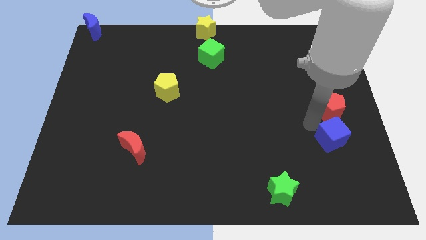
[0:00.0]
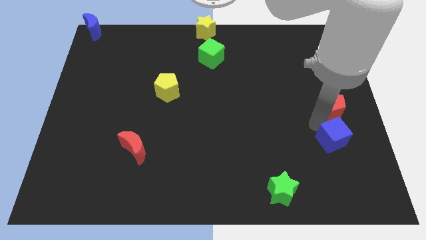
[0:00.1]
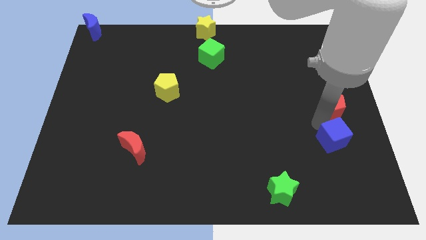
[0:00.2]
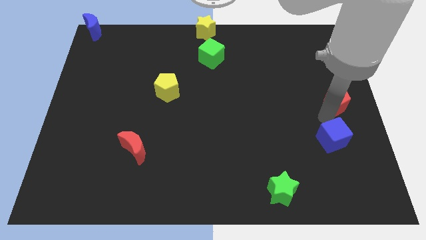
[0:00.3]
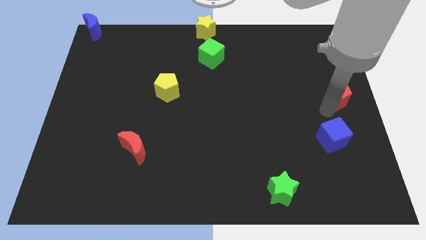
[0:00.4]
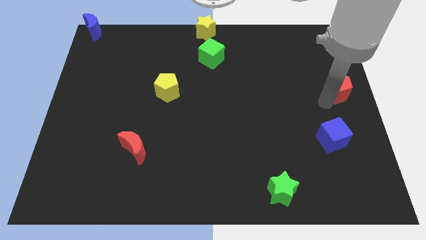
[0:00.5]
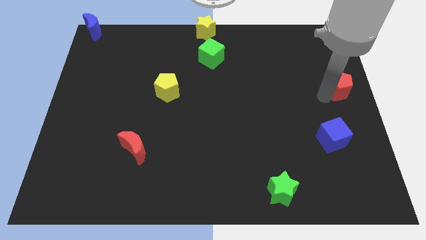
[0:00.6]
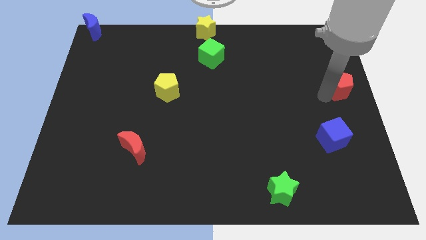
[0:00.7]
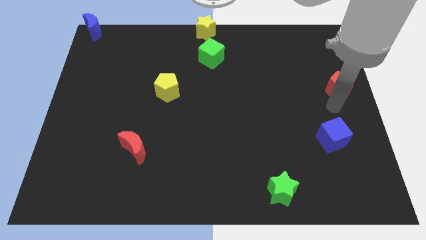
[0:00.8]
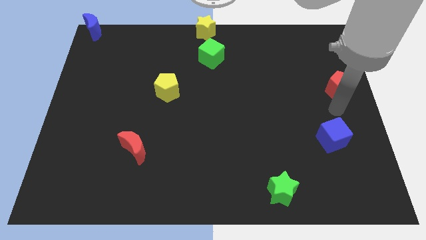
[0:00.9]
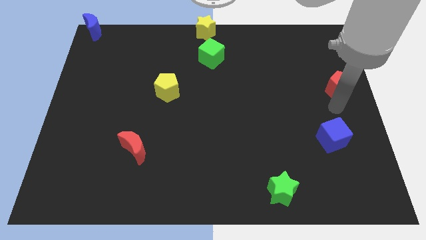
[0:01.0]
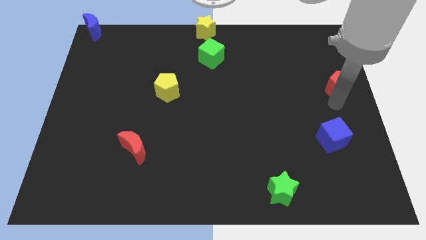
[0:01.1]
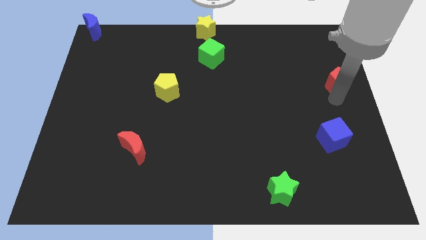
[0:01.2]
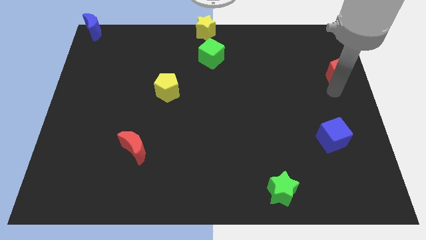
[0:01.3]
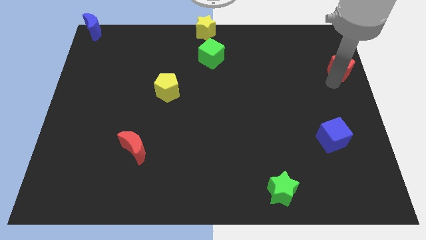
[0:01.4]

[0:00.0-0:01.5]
separarate the red pentagon from the top side of the blue cube

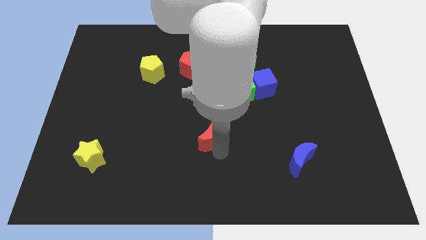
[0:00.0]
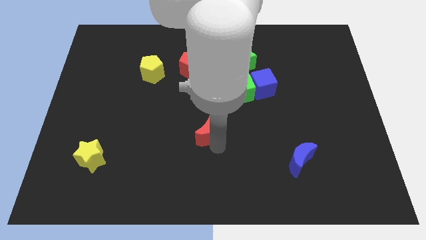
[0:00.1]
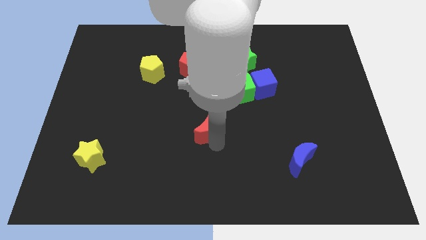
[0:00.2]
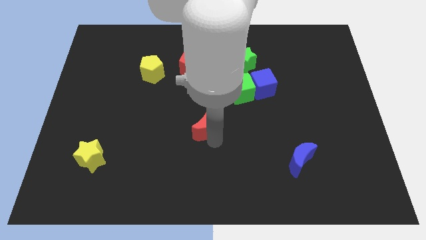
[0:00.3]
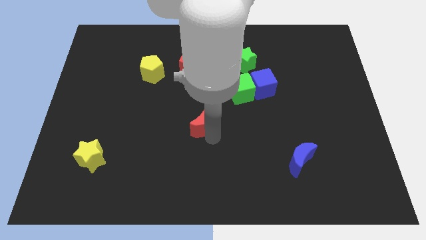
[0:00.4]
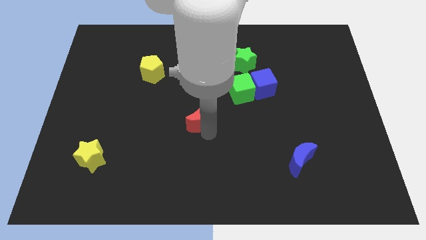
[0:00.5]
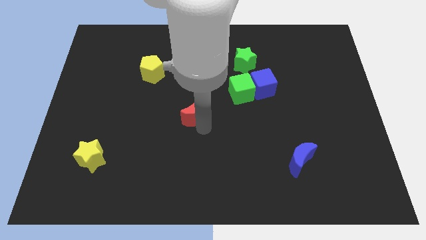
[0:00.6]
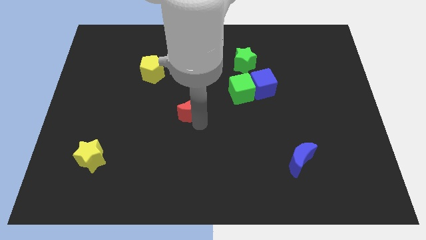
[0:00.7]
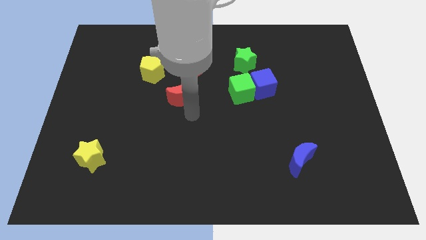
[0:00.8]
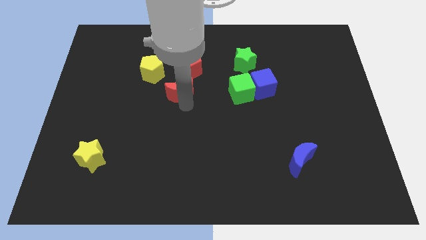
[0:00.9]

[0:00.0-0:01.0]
place the red moon left to the green cube

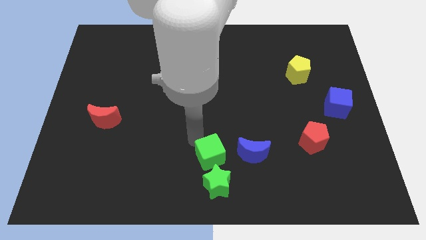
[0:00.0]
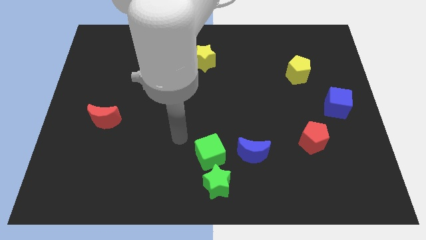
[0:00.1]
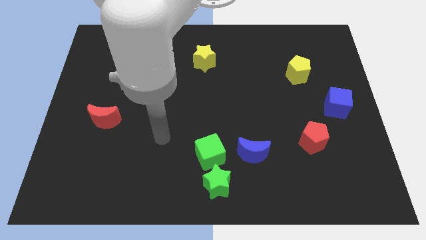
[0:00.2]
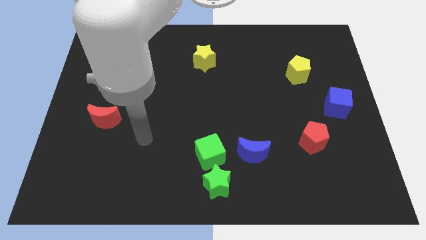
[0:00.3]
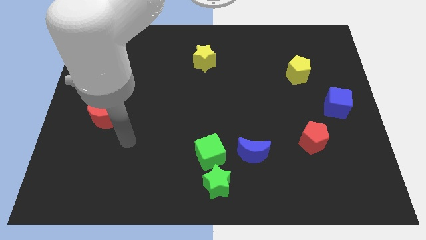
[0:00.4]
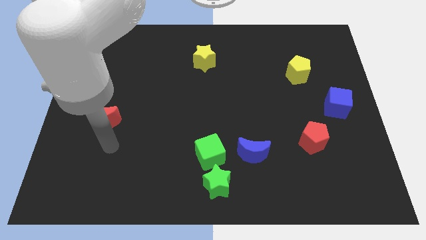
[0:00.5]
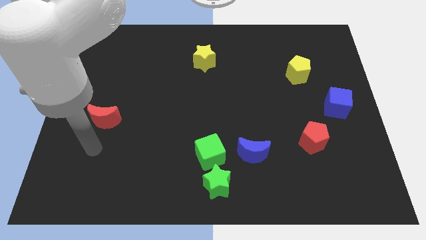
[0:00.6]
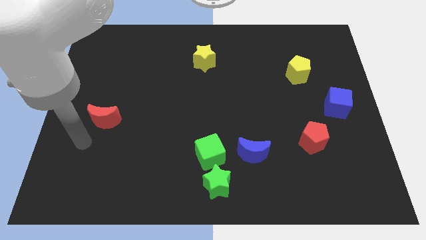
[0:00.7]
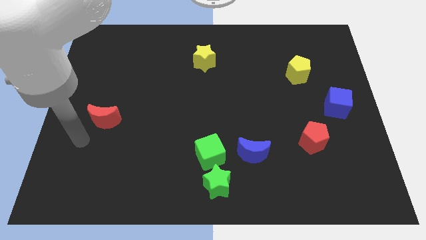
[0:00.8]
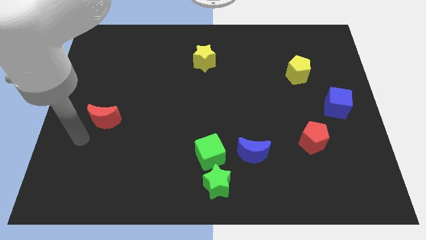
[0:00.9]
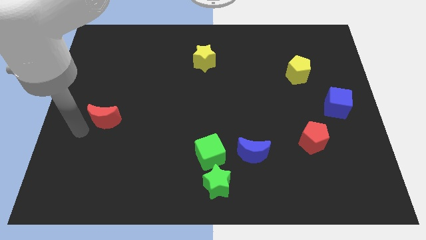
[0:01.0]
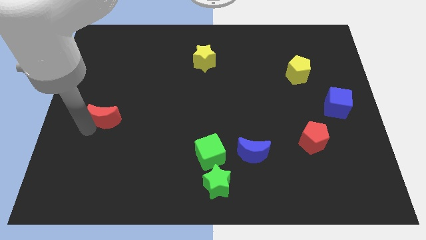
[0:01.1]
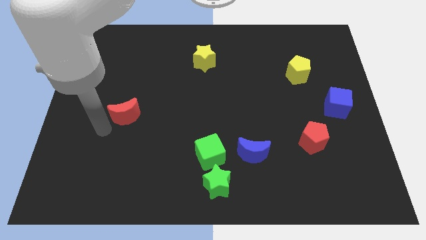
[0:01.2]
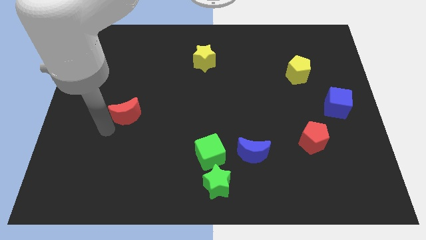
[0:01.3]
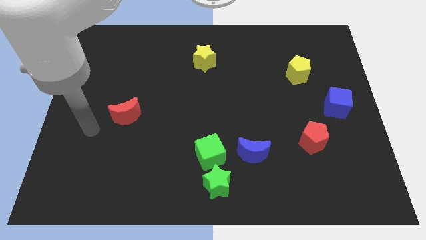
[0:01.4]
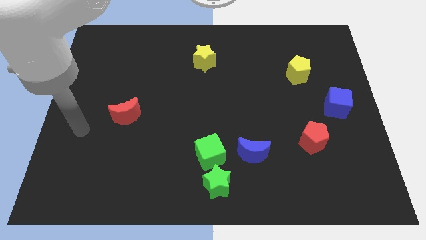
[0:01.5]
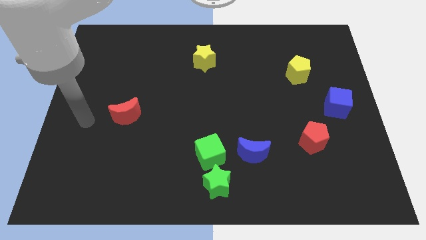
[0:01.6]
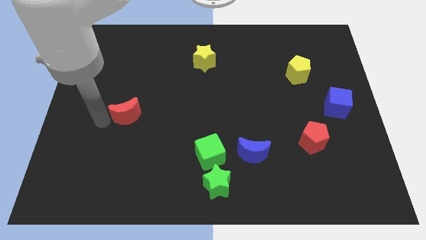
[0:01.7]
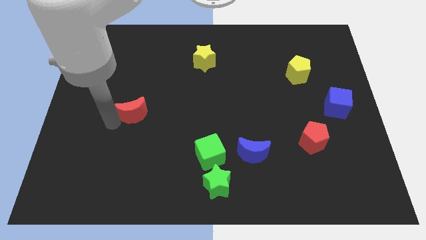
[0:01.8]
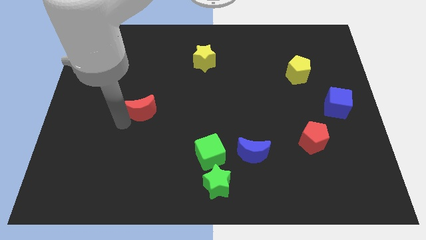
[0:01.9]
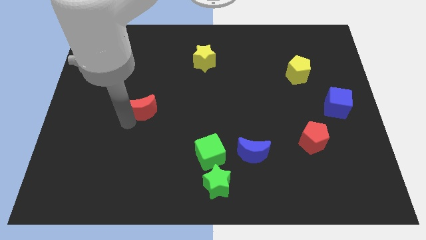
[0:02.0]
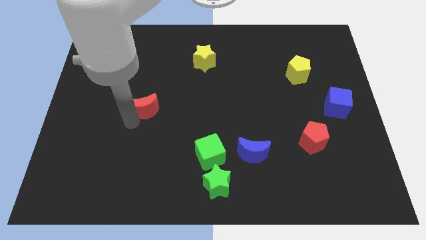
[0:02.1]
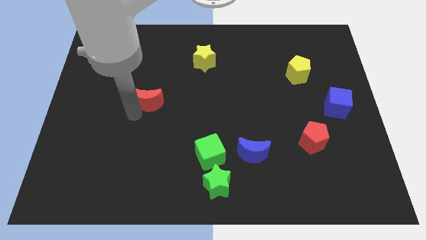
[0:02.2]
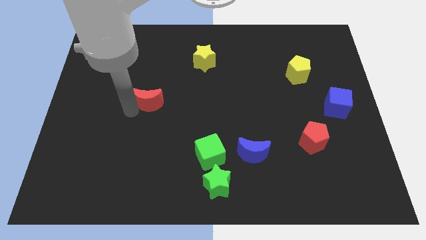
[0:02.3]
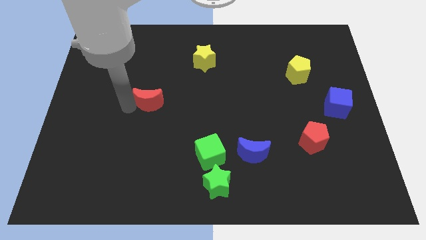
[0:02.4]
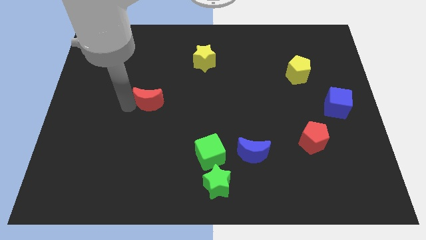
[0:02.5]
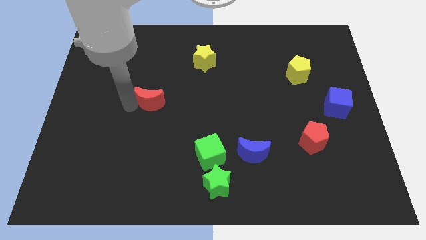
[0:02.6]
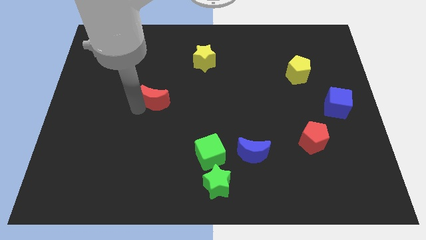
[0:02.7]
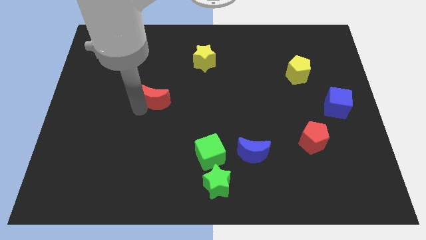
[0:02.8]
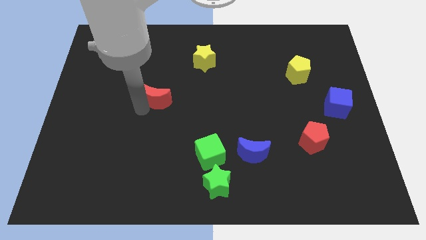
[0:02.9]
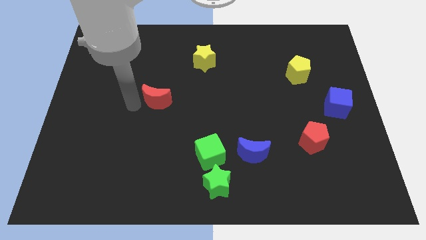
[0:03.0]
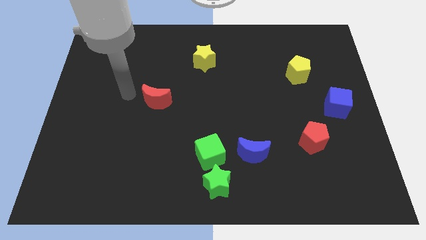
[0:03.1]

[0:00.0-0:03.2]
place the red crescent diagonally above the top left side of the green cube

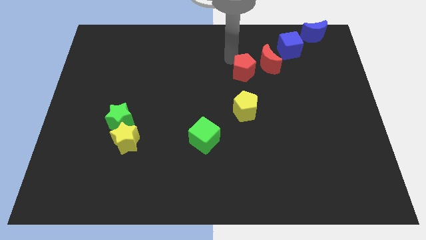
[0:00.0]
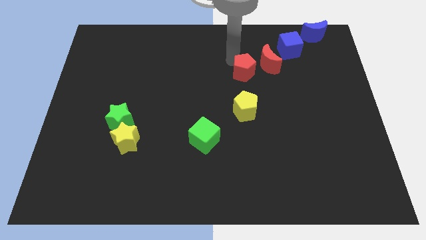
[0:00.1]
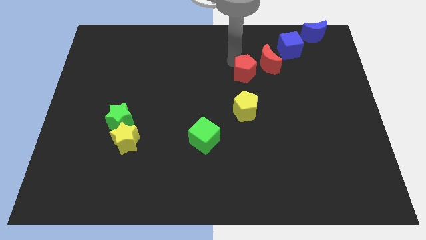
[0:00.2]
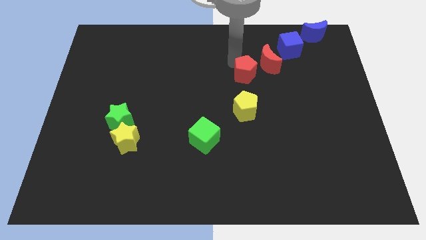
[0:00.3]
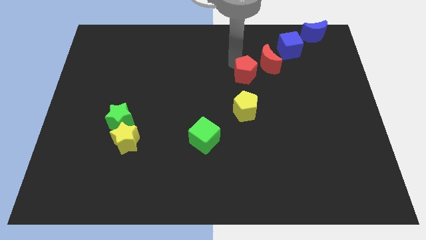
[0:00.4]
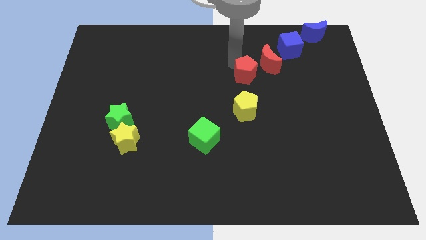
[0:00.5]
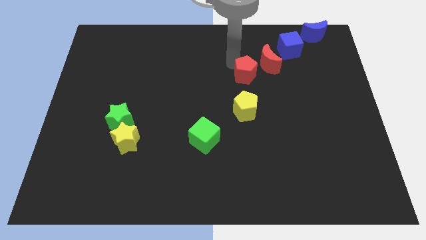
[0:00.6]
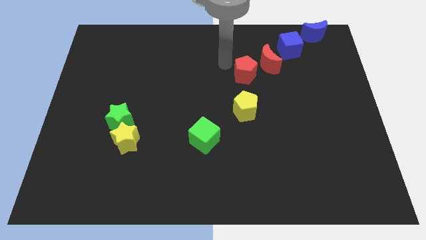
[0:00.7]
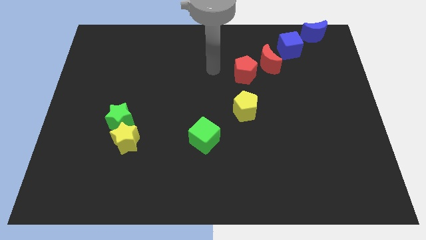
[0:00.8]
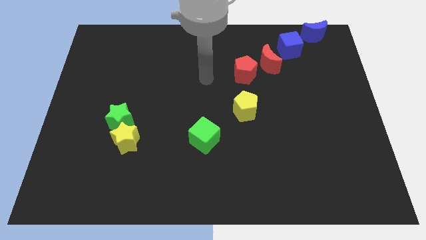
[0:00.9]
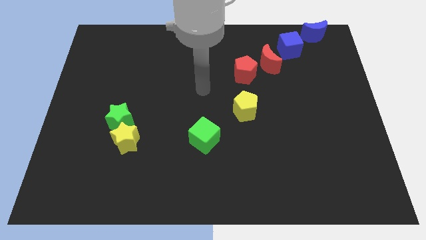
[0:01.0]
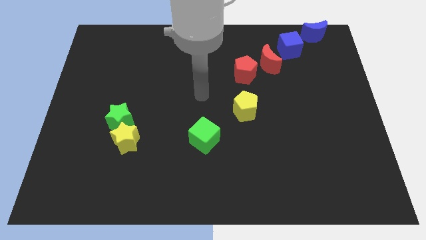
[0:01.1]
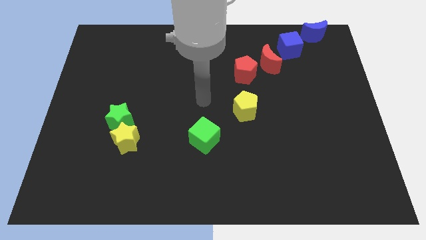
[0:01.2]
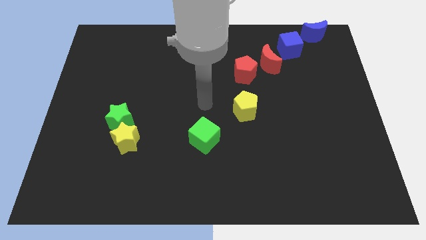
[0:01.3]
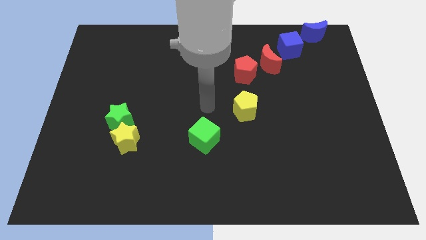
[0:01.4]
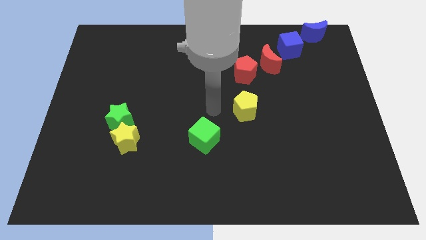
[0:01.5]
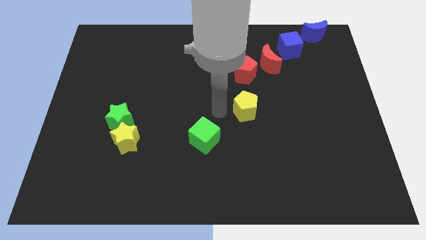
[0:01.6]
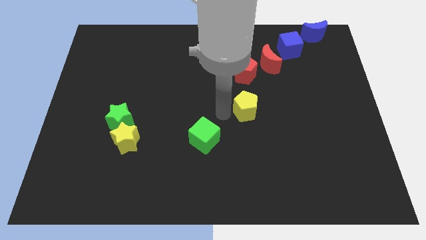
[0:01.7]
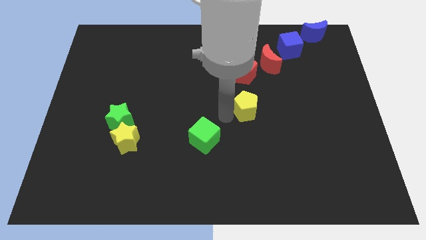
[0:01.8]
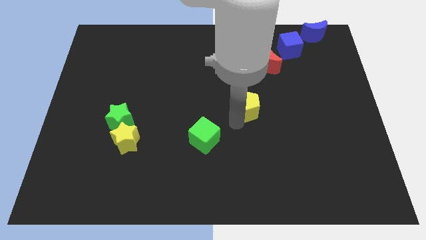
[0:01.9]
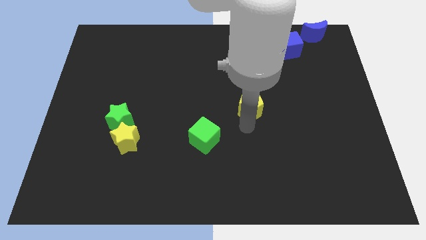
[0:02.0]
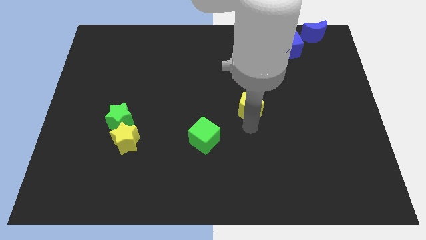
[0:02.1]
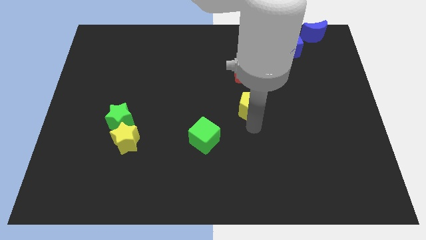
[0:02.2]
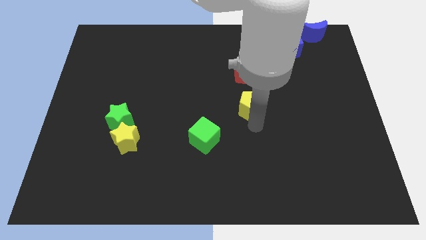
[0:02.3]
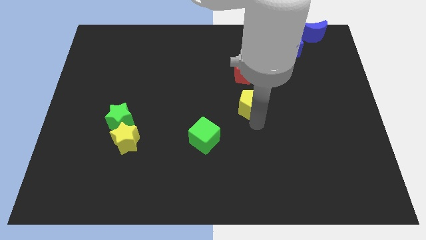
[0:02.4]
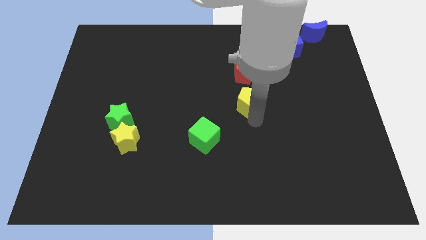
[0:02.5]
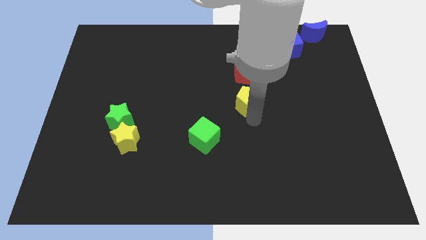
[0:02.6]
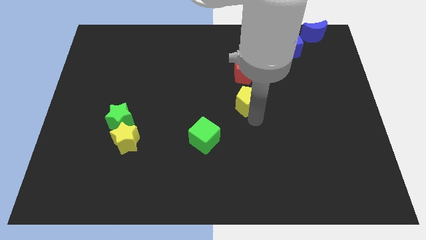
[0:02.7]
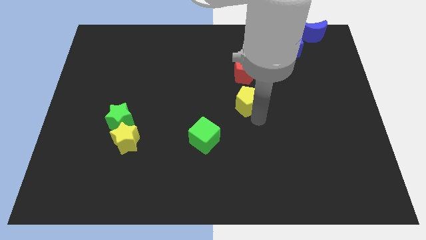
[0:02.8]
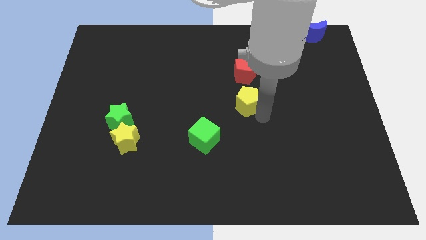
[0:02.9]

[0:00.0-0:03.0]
move the yellow pentagon to the bottom of red pentagon

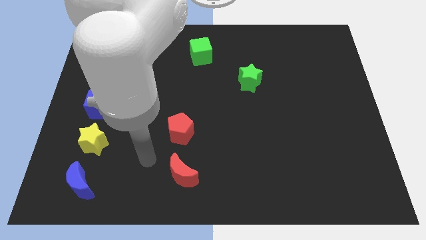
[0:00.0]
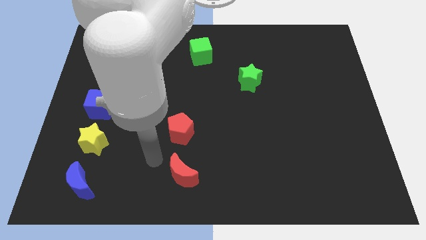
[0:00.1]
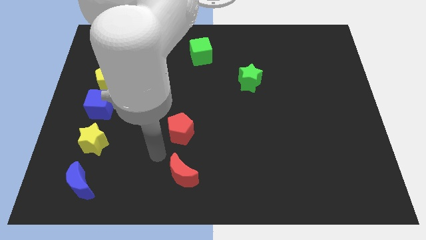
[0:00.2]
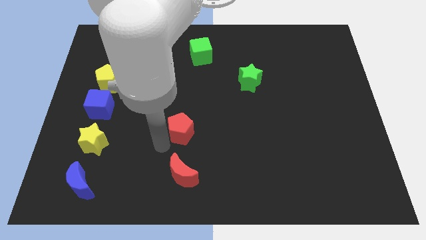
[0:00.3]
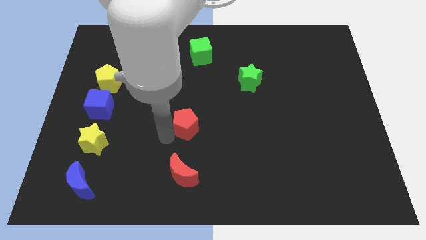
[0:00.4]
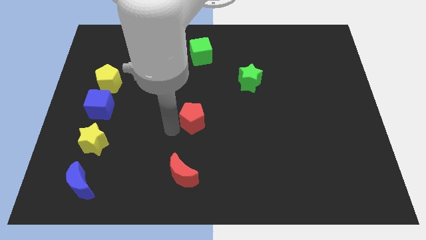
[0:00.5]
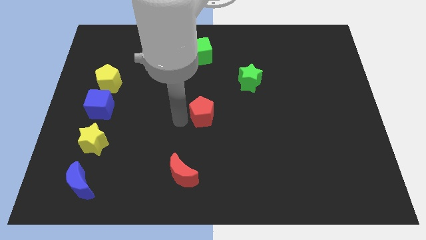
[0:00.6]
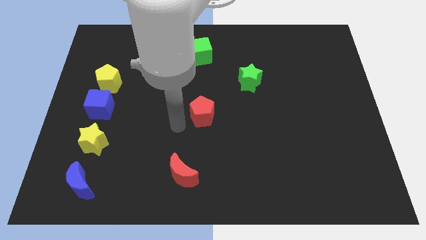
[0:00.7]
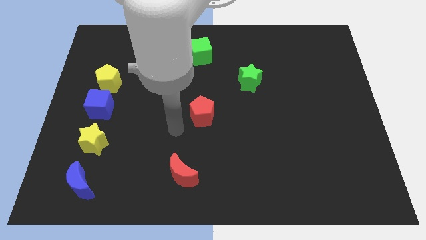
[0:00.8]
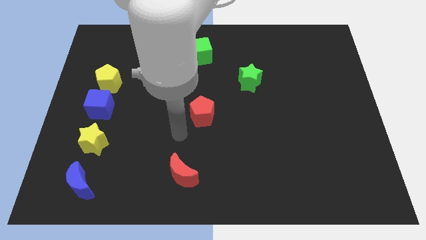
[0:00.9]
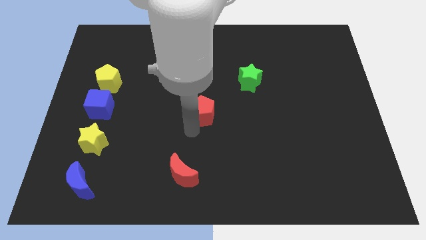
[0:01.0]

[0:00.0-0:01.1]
push the red pentagon to the center
